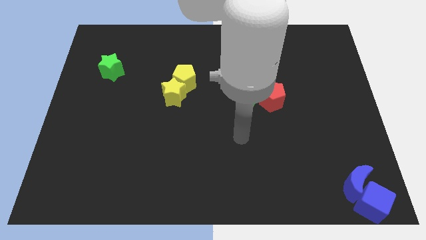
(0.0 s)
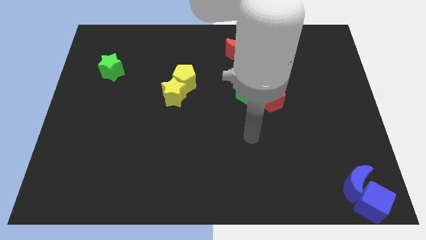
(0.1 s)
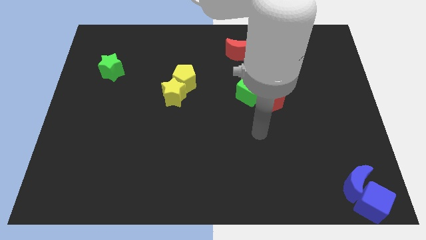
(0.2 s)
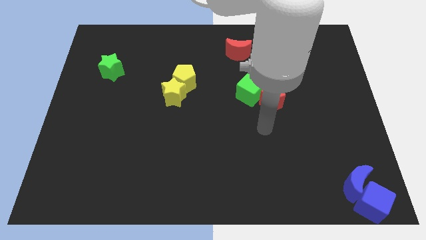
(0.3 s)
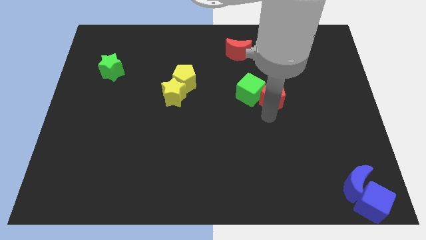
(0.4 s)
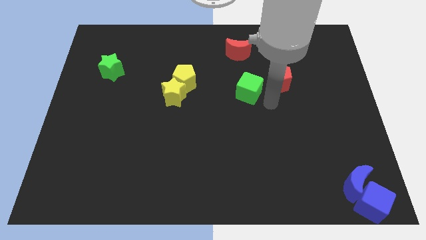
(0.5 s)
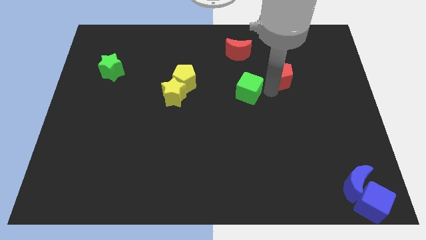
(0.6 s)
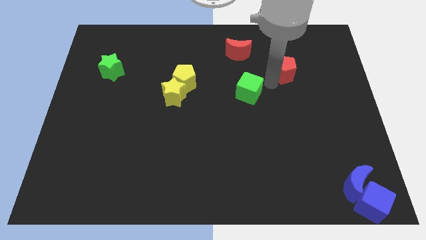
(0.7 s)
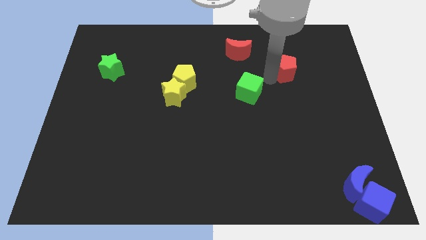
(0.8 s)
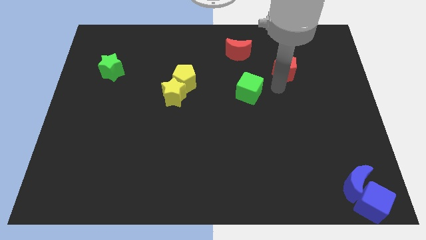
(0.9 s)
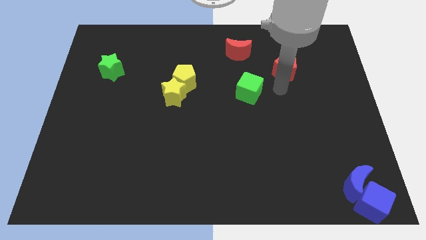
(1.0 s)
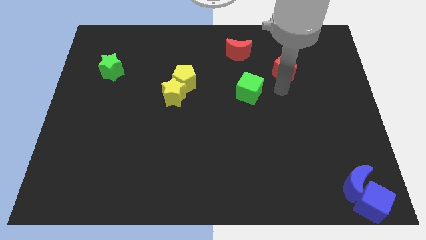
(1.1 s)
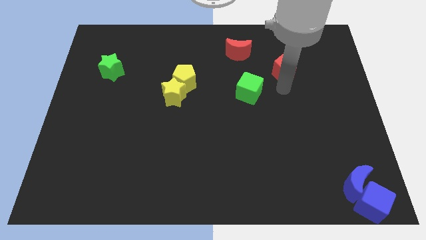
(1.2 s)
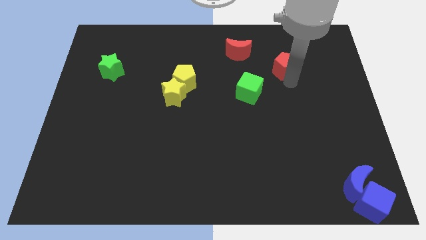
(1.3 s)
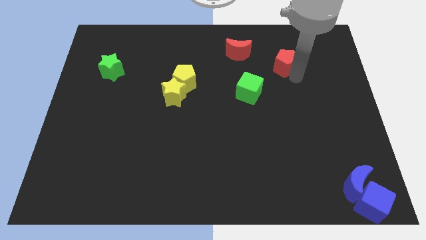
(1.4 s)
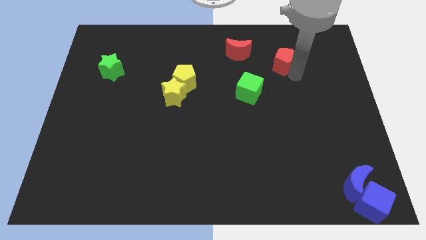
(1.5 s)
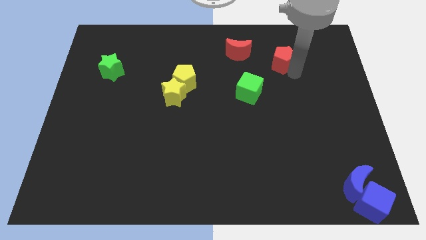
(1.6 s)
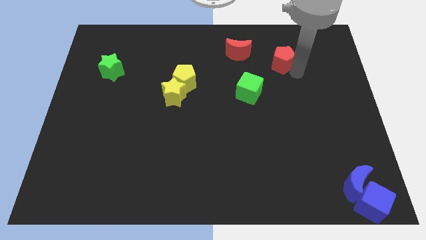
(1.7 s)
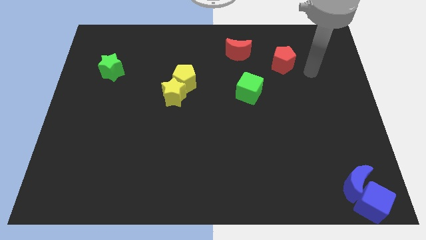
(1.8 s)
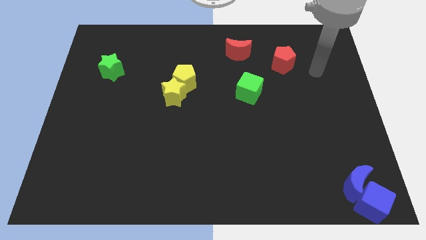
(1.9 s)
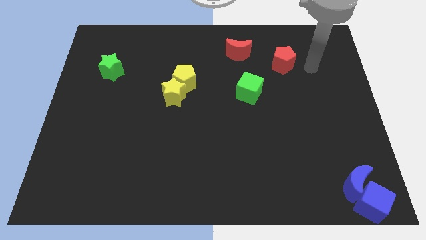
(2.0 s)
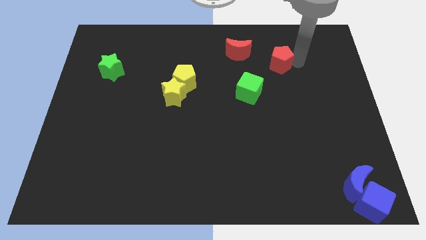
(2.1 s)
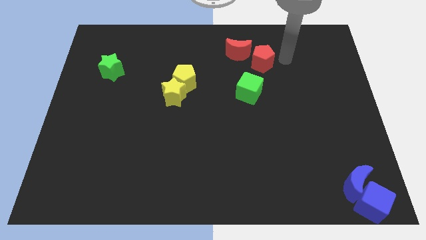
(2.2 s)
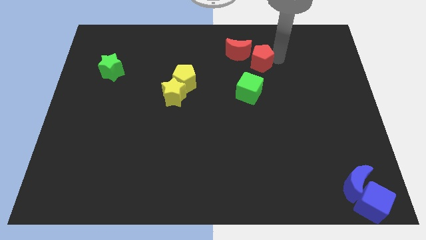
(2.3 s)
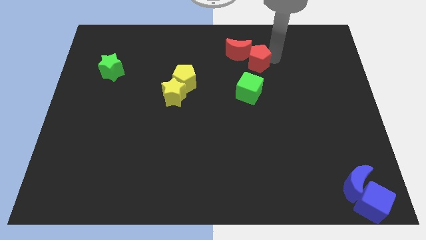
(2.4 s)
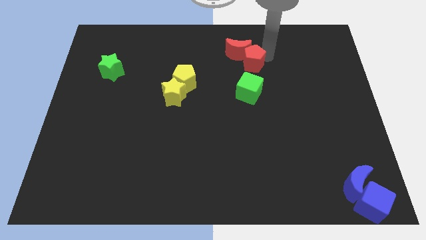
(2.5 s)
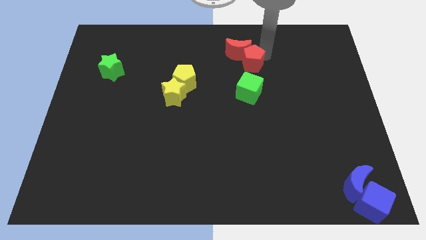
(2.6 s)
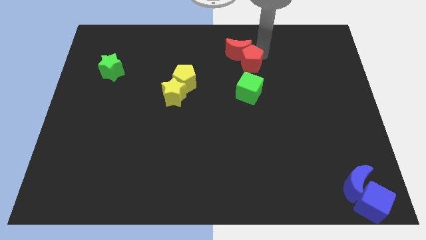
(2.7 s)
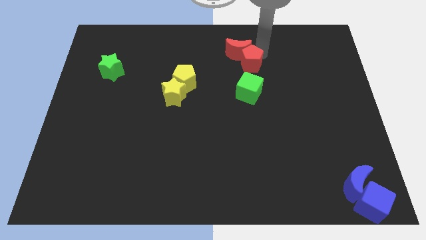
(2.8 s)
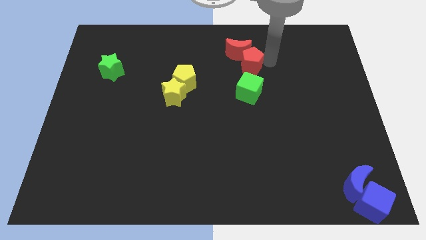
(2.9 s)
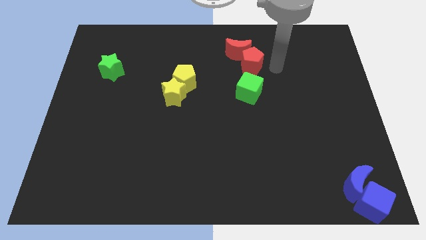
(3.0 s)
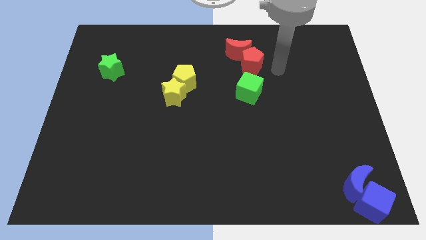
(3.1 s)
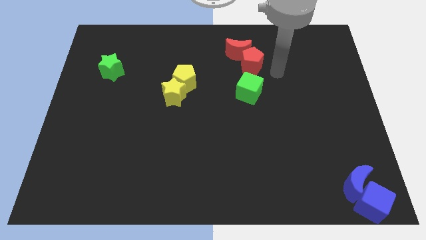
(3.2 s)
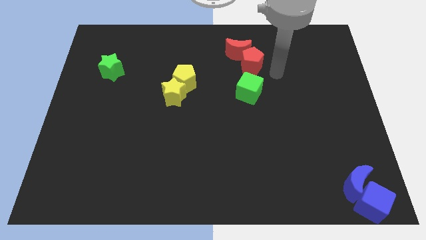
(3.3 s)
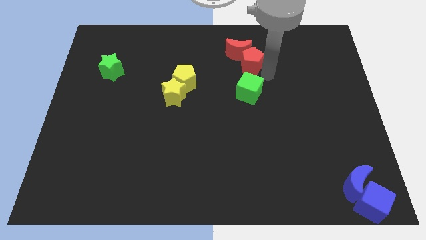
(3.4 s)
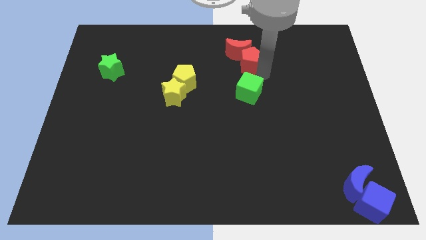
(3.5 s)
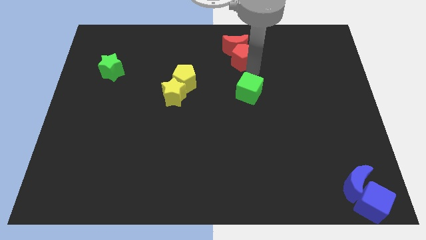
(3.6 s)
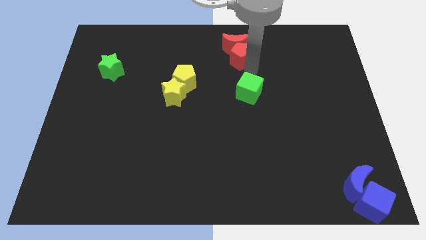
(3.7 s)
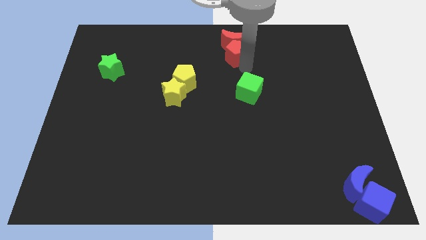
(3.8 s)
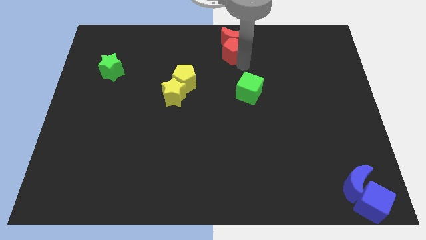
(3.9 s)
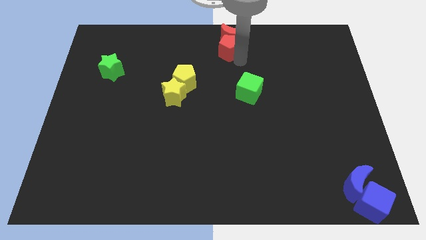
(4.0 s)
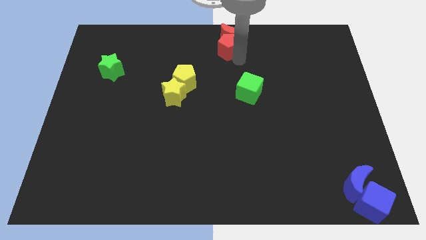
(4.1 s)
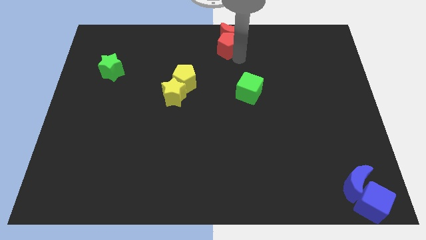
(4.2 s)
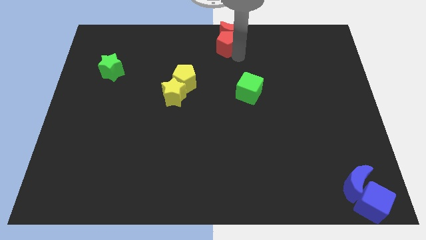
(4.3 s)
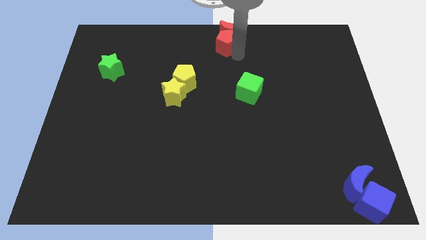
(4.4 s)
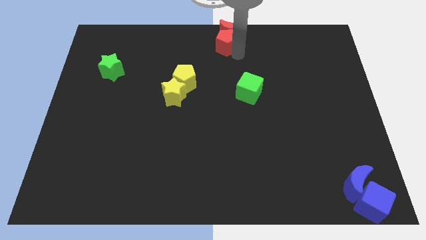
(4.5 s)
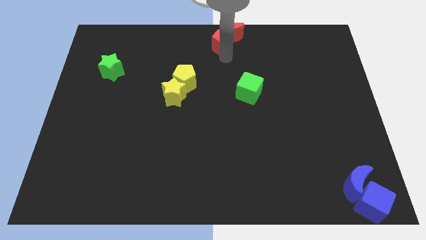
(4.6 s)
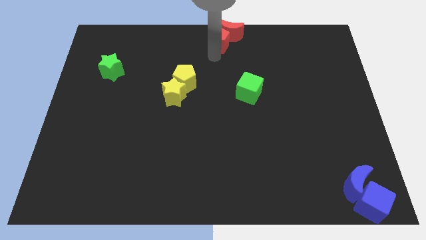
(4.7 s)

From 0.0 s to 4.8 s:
push the red pentagon into the red moon

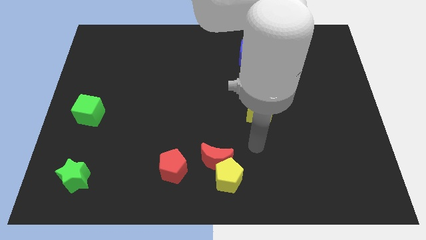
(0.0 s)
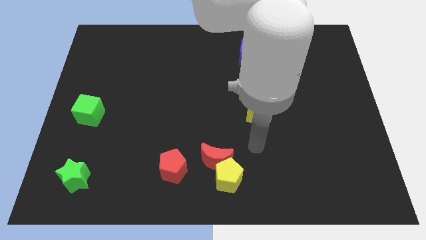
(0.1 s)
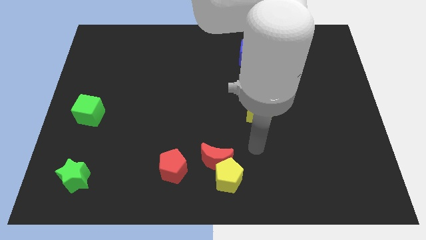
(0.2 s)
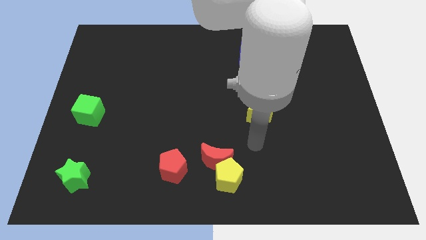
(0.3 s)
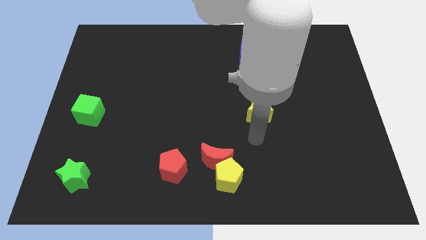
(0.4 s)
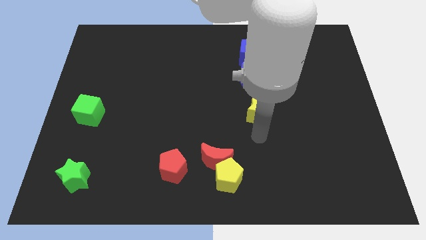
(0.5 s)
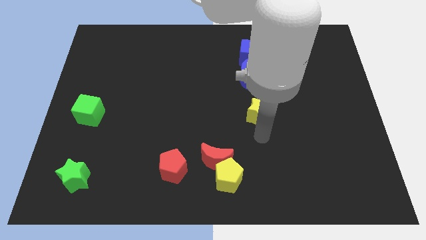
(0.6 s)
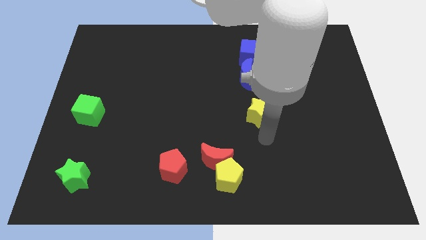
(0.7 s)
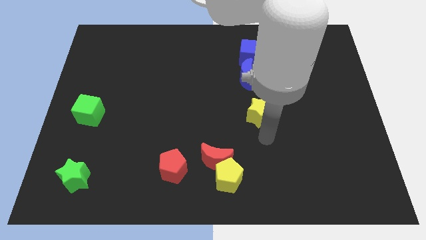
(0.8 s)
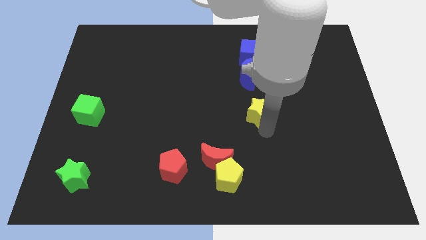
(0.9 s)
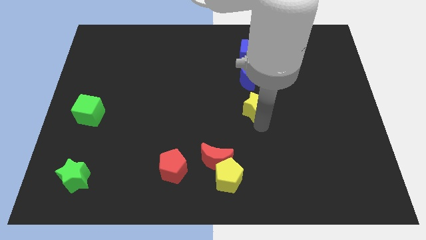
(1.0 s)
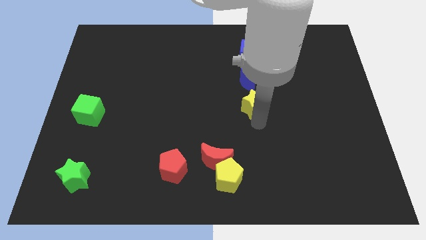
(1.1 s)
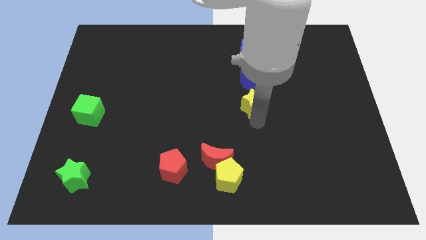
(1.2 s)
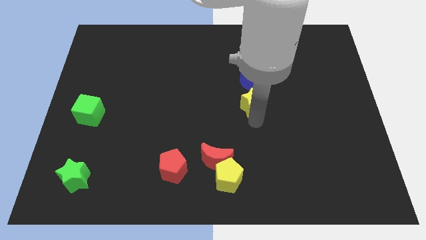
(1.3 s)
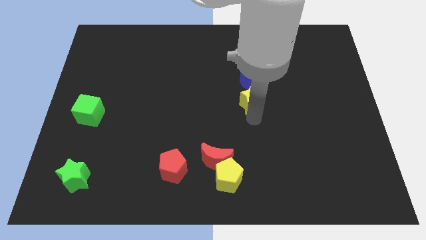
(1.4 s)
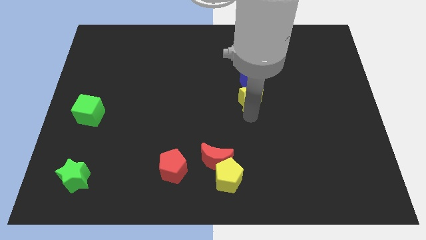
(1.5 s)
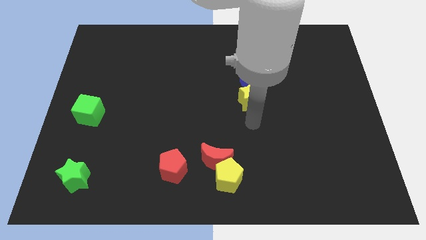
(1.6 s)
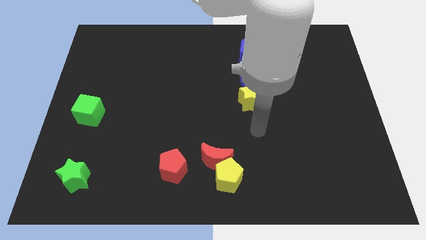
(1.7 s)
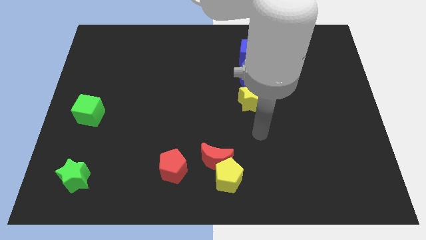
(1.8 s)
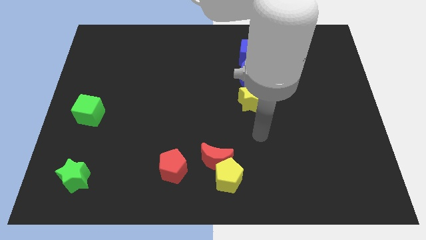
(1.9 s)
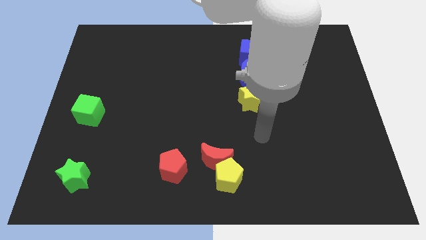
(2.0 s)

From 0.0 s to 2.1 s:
push the yellow star into blue moon

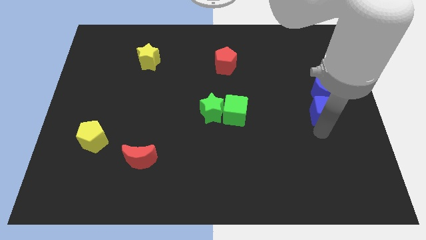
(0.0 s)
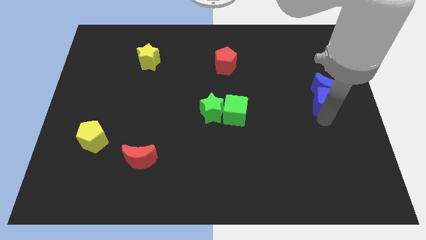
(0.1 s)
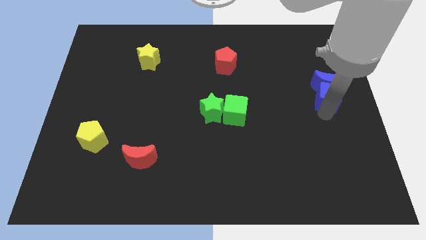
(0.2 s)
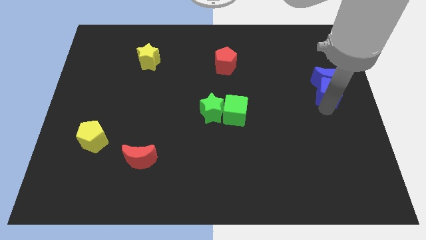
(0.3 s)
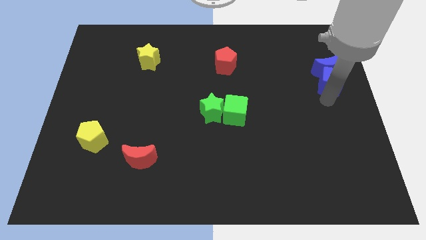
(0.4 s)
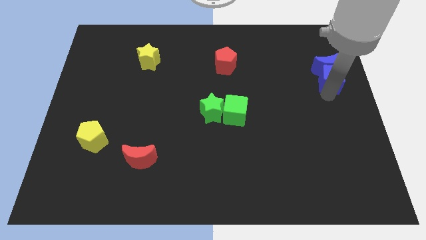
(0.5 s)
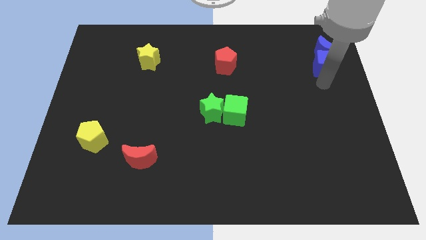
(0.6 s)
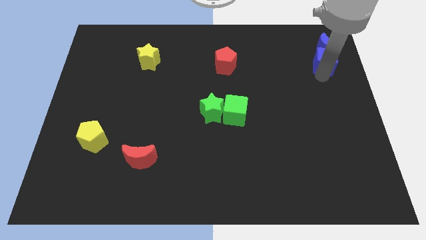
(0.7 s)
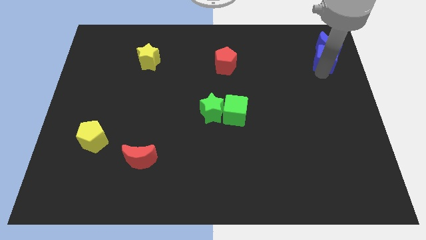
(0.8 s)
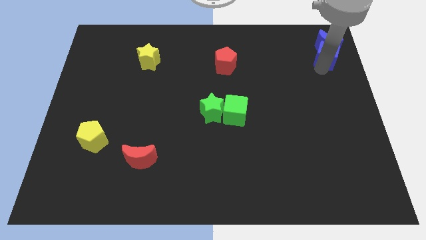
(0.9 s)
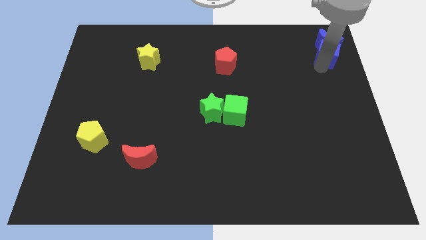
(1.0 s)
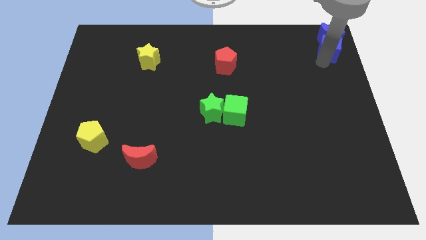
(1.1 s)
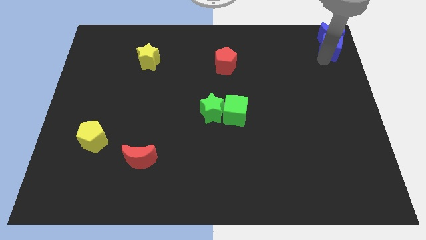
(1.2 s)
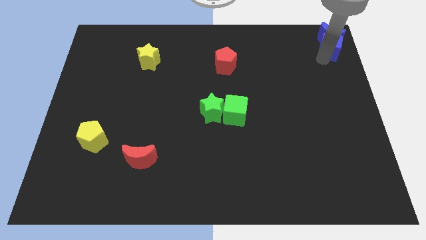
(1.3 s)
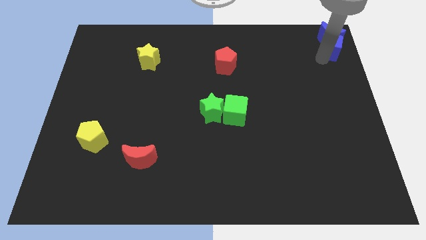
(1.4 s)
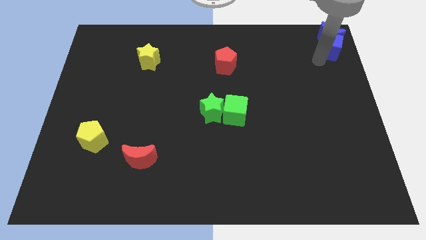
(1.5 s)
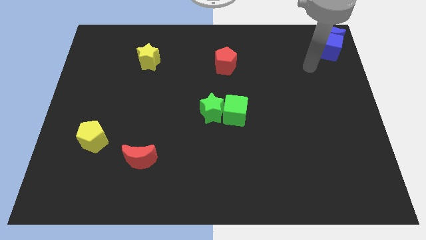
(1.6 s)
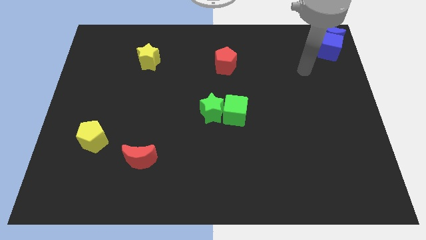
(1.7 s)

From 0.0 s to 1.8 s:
push the blue cube and blue crescent to the top right corner of the board

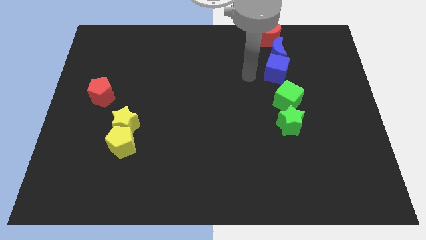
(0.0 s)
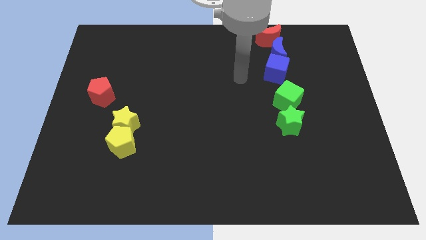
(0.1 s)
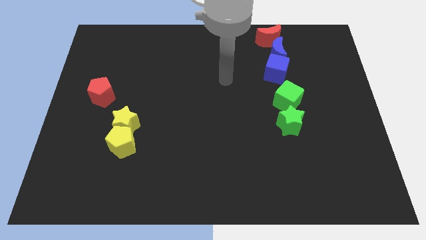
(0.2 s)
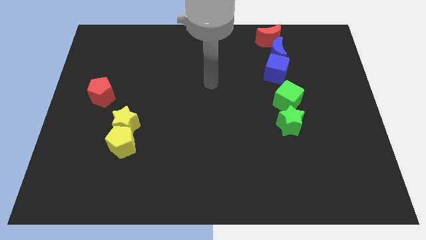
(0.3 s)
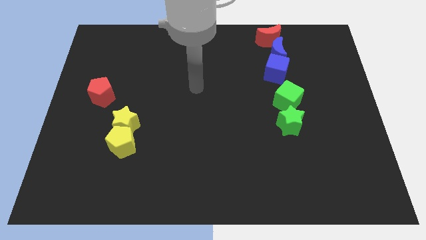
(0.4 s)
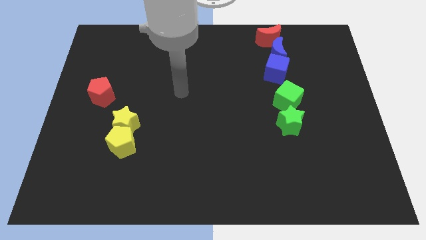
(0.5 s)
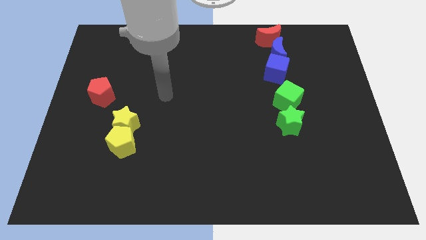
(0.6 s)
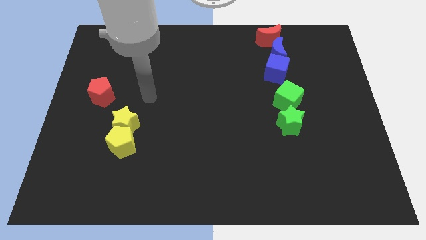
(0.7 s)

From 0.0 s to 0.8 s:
move your arm towards red pentagon
